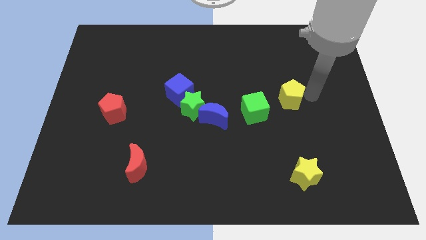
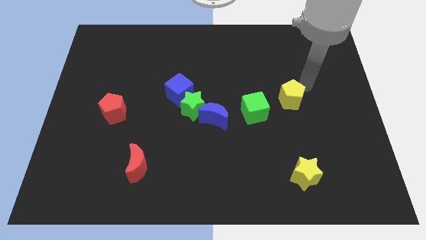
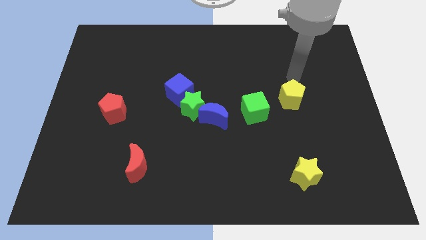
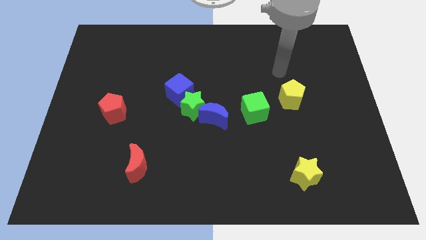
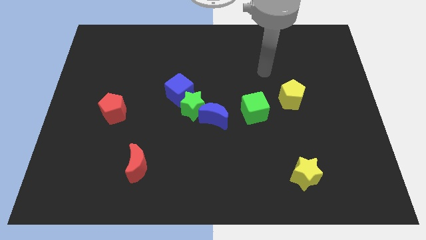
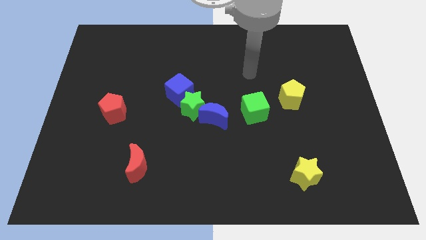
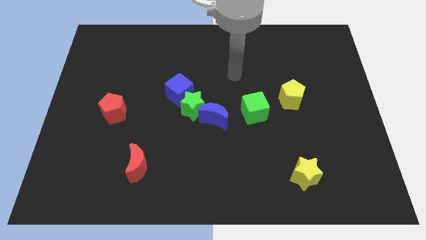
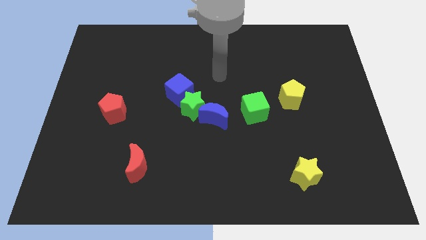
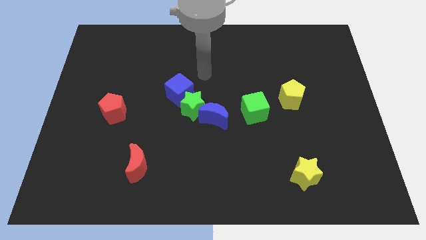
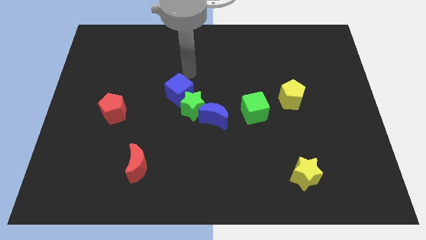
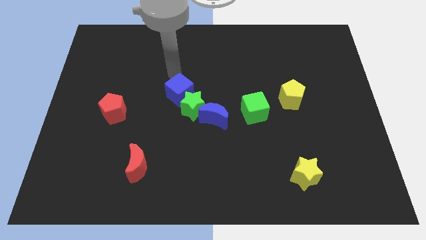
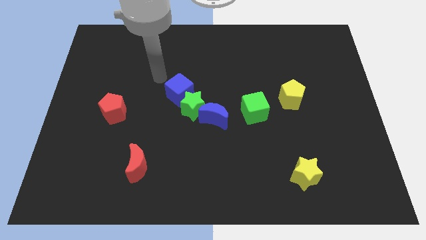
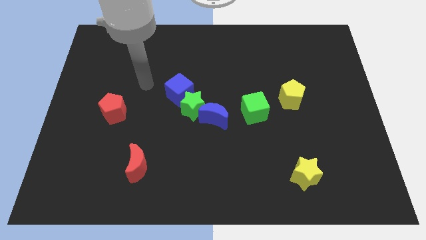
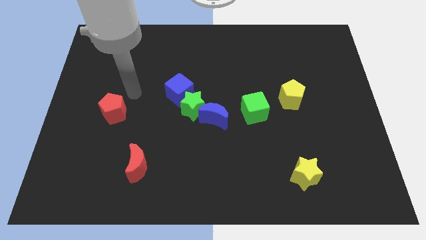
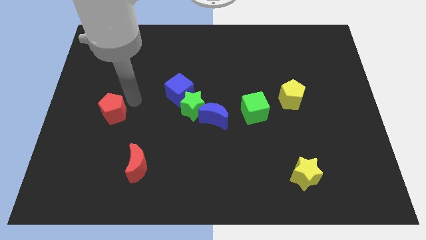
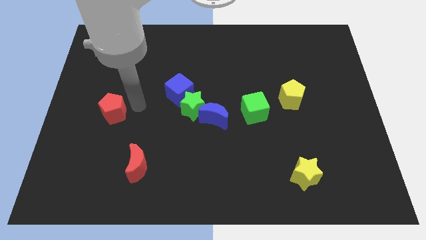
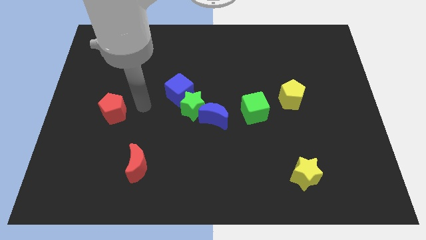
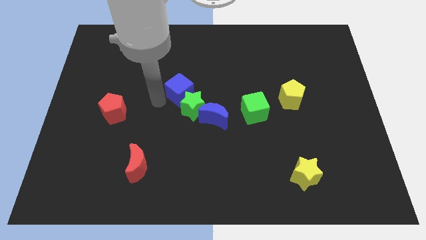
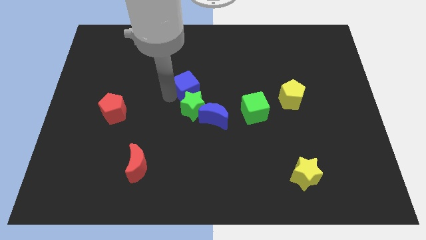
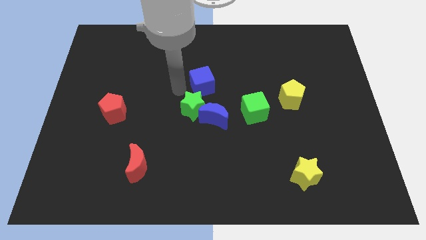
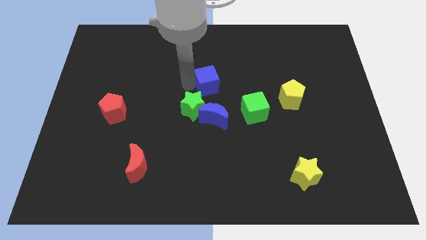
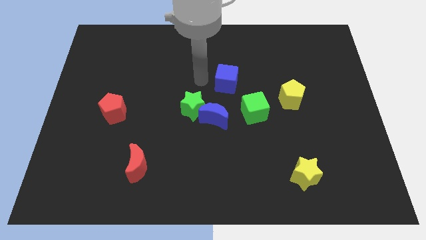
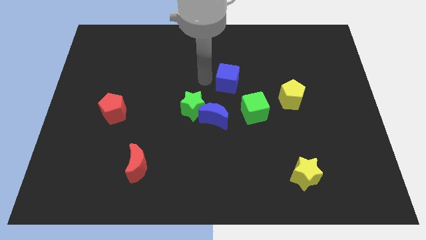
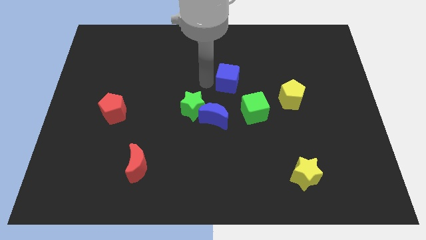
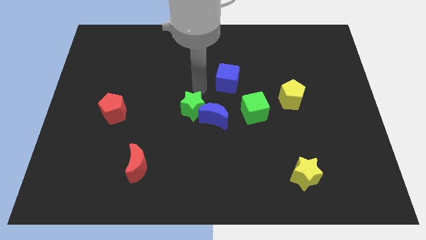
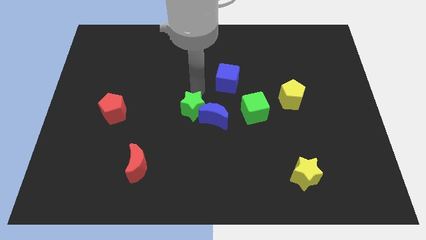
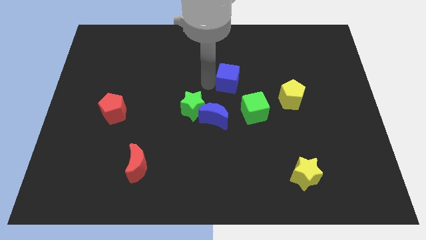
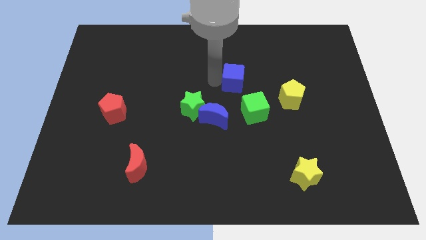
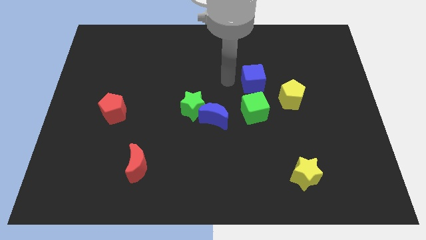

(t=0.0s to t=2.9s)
push the blue cube to the top side of the green cube

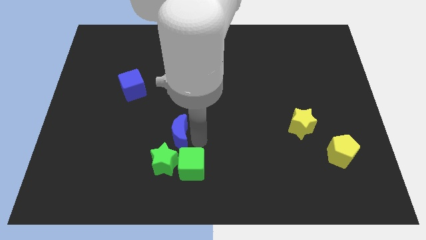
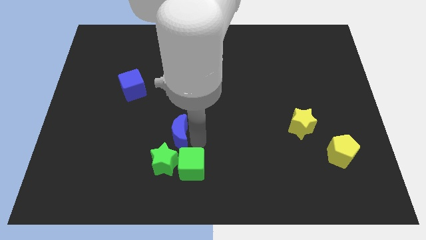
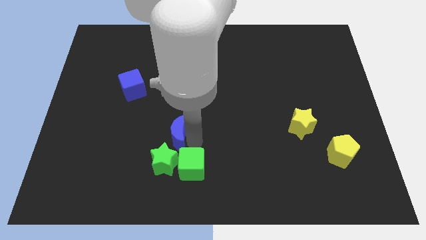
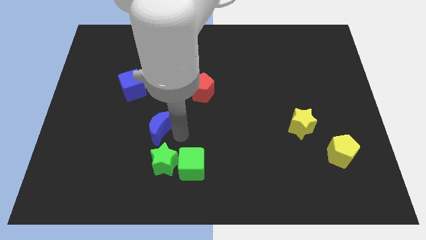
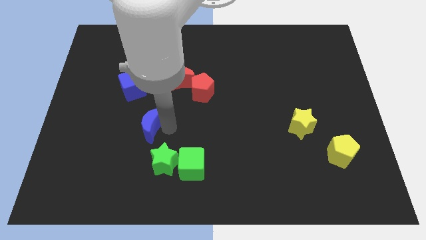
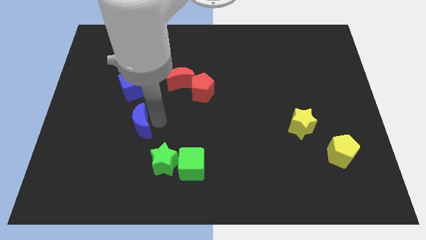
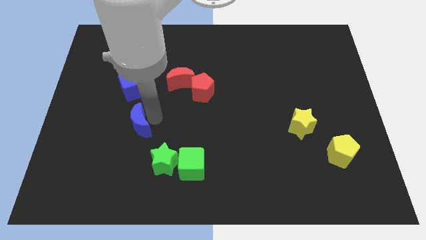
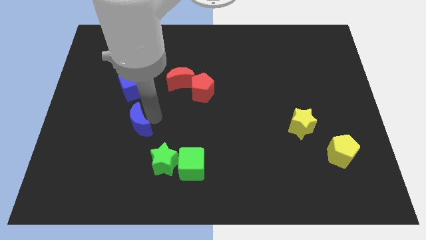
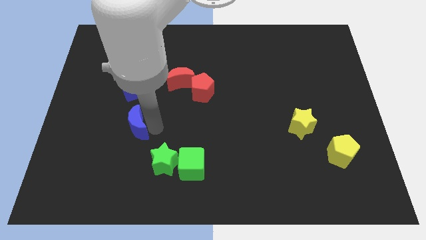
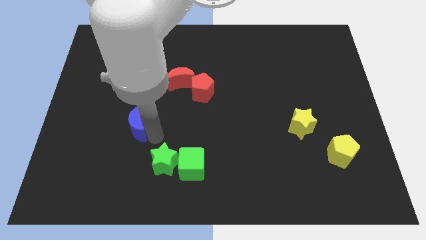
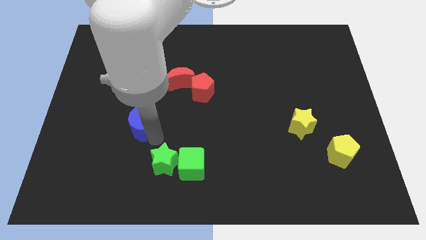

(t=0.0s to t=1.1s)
separate blue moon from green blocks

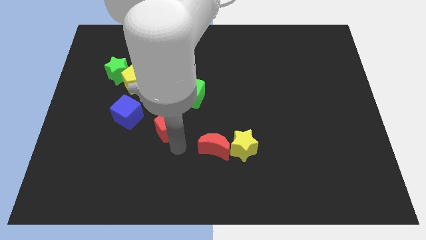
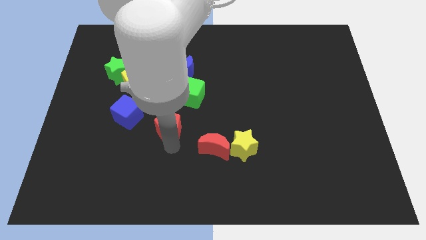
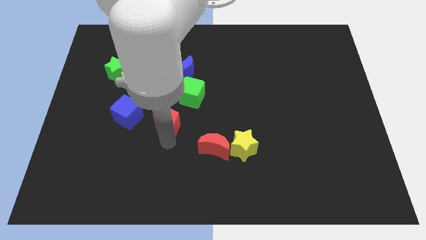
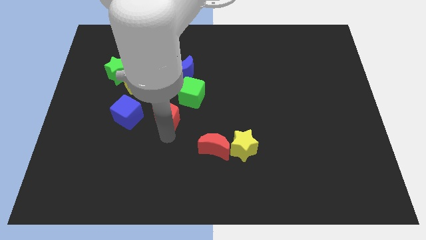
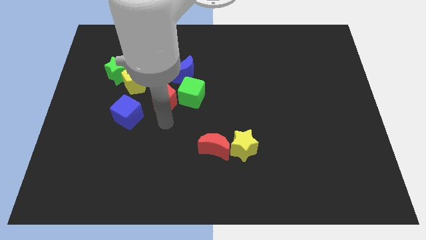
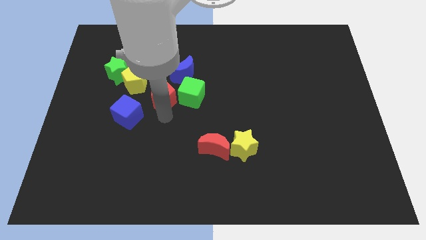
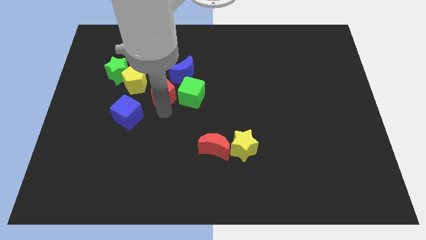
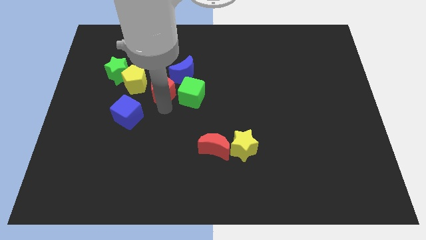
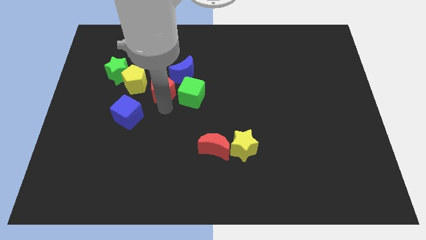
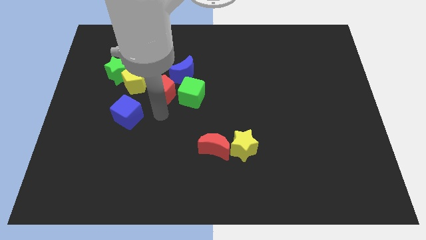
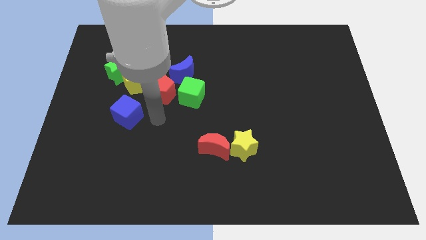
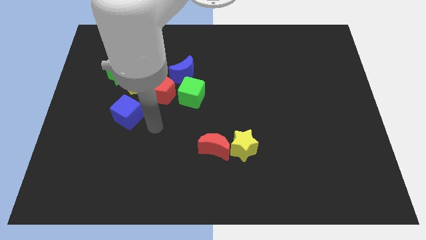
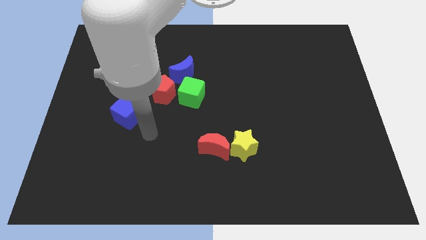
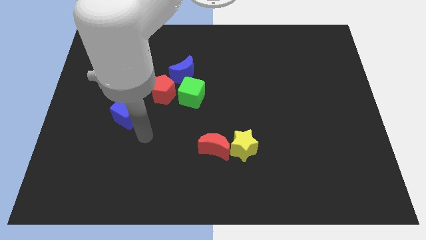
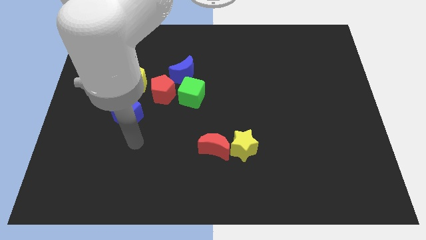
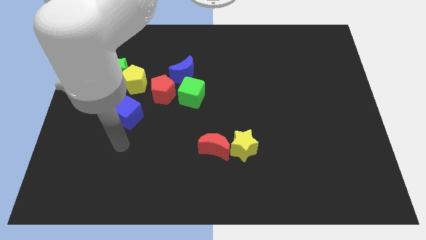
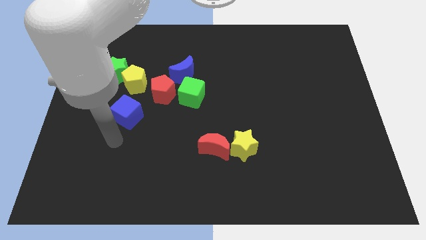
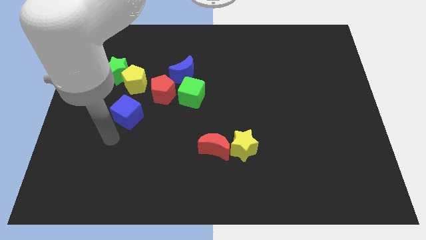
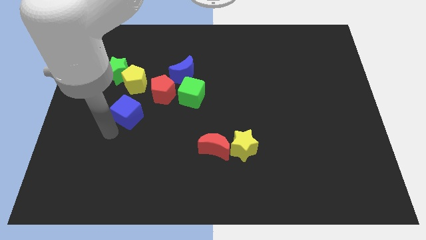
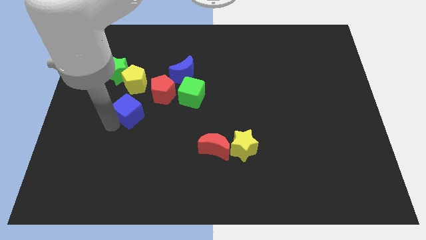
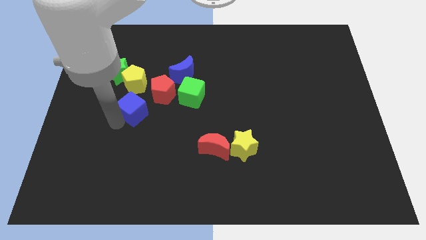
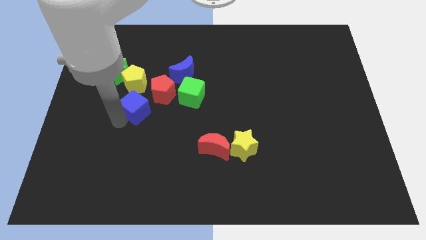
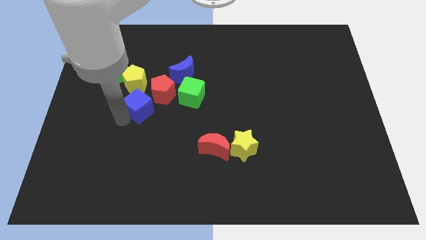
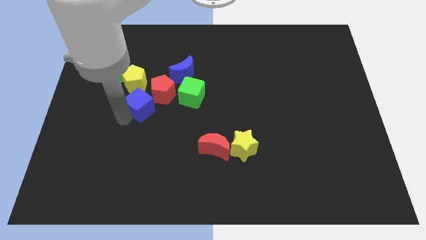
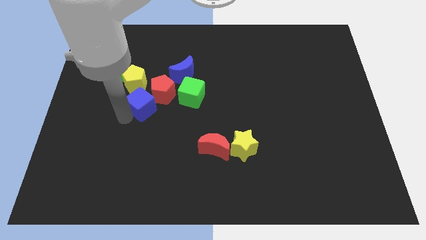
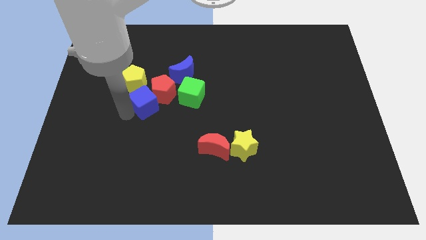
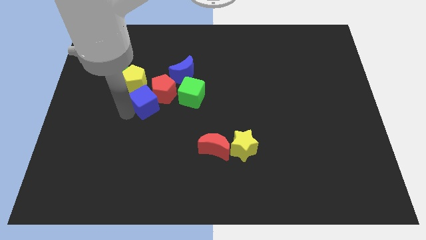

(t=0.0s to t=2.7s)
move the blue cube below the red pentagon

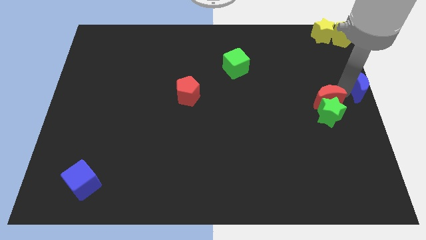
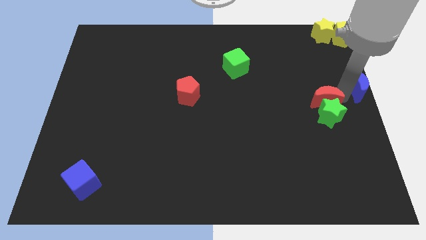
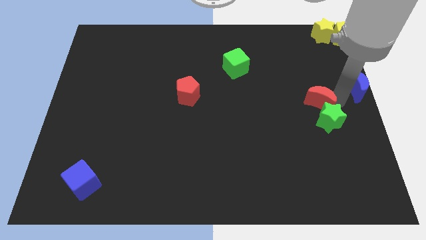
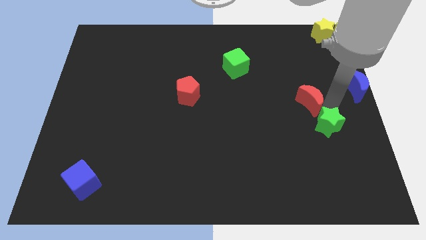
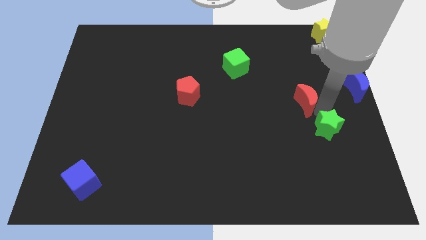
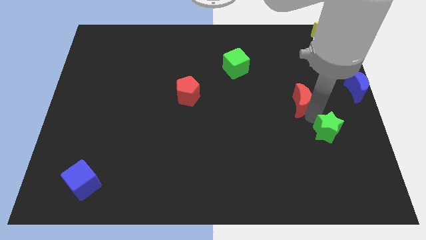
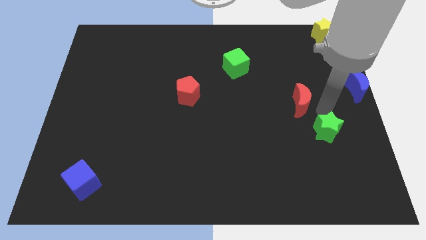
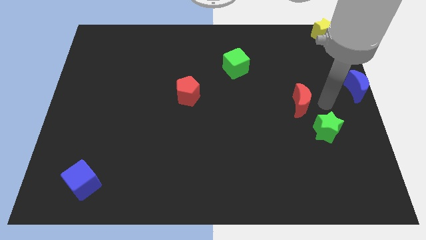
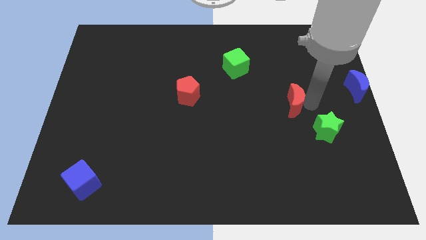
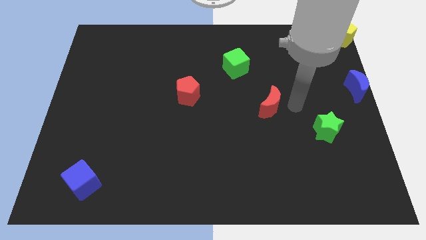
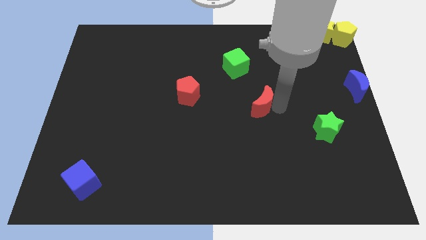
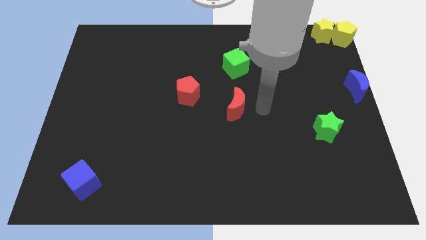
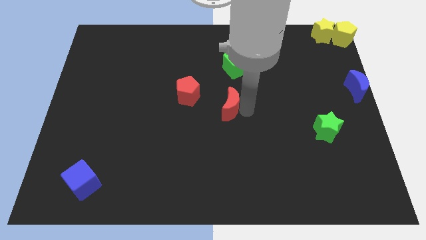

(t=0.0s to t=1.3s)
separate the red moon from the green star

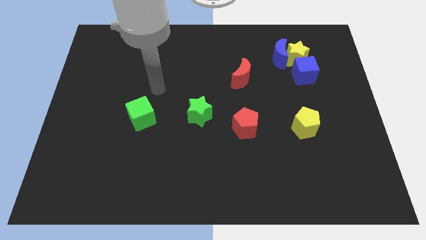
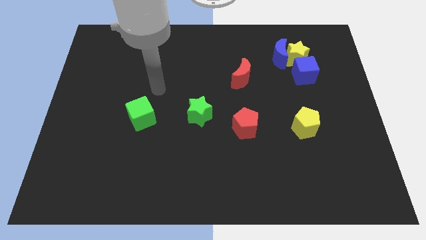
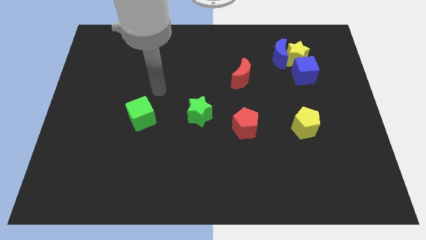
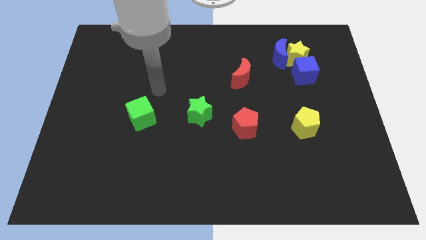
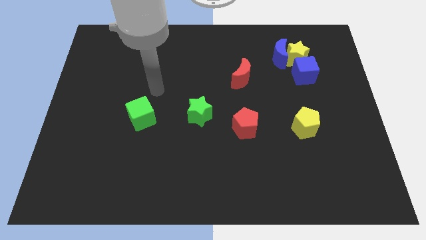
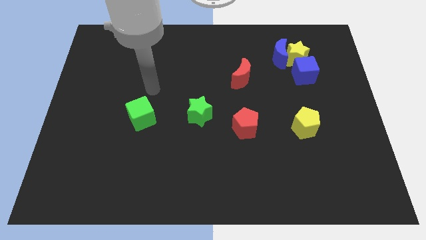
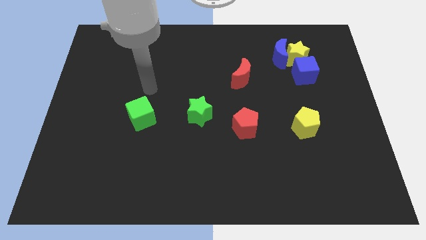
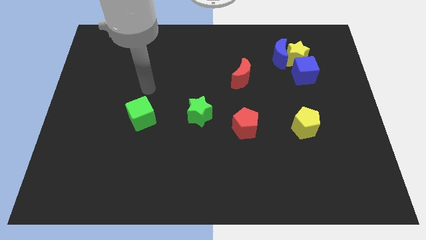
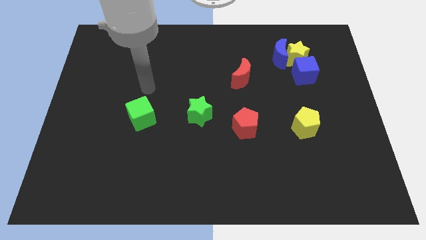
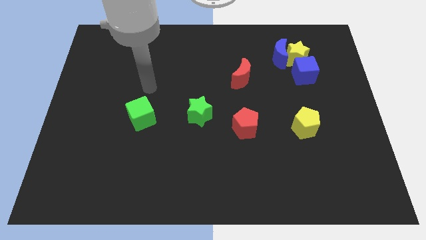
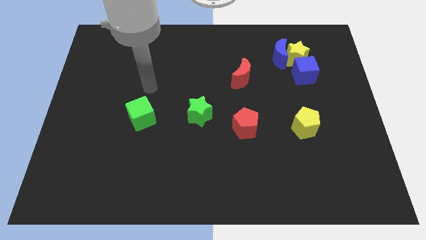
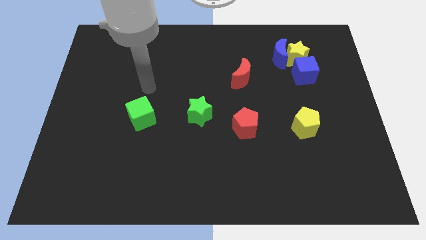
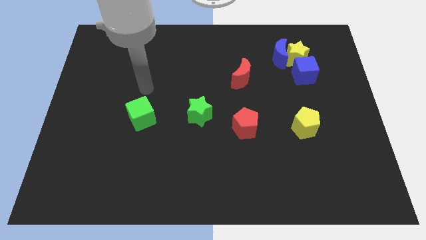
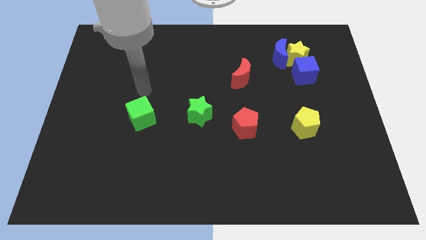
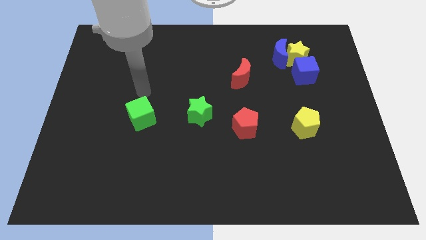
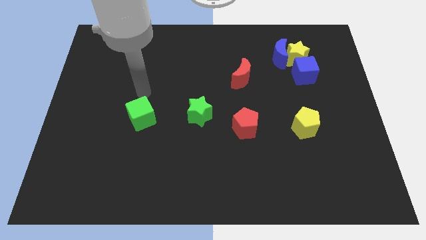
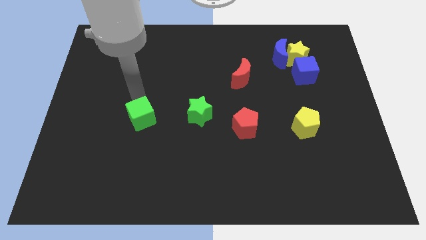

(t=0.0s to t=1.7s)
place your above green cube
